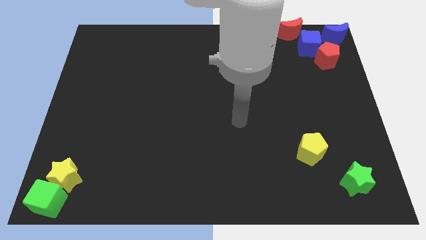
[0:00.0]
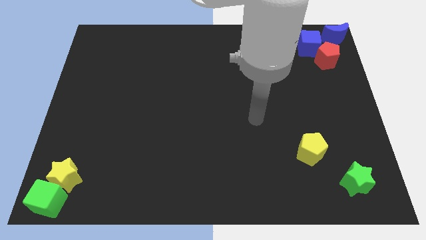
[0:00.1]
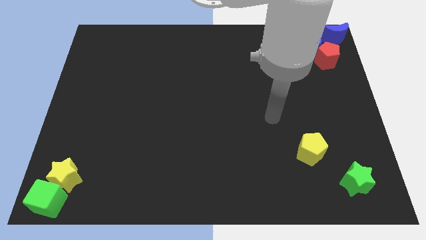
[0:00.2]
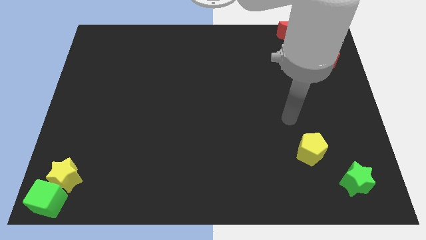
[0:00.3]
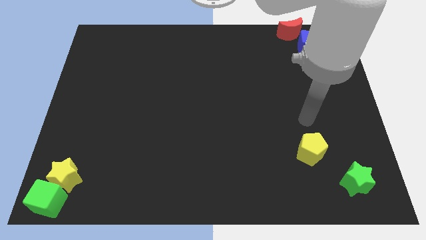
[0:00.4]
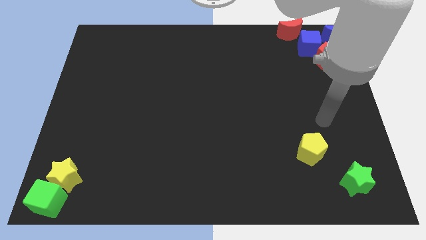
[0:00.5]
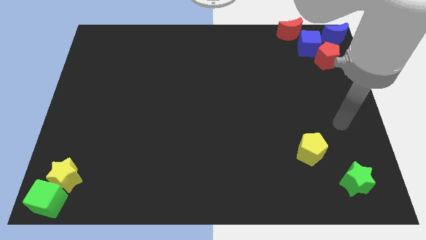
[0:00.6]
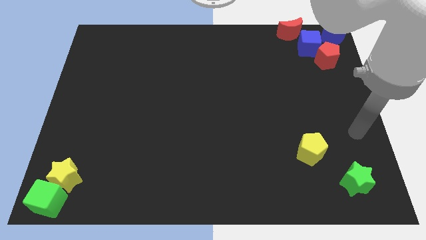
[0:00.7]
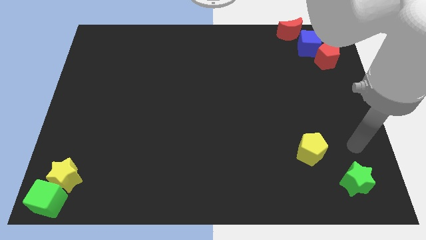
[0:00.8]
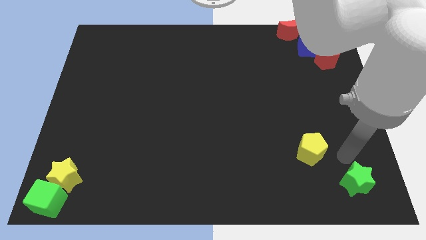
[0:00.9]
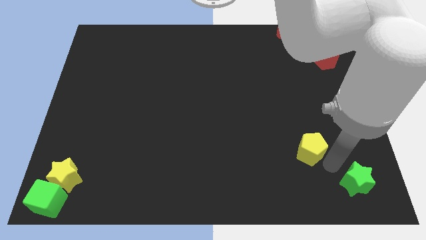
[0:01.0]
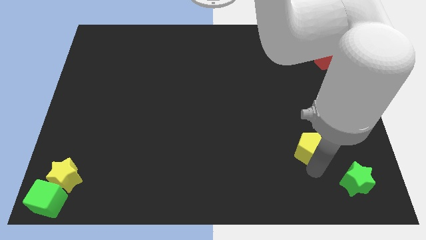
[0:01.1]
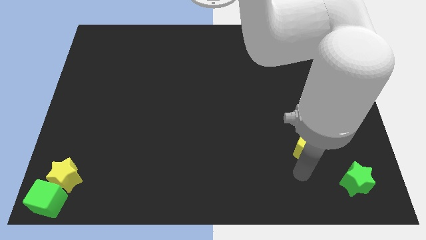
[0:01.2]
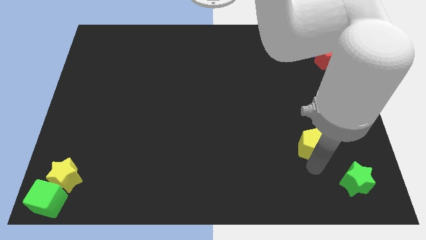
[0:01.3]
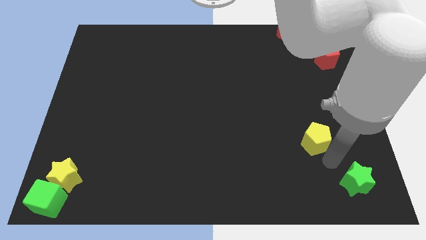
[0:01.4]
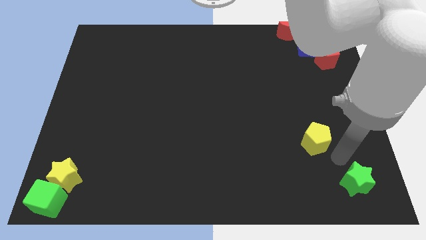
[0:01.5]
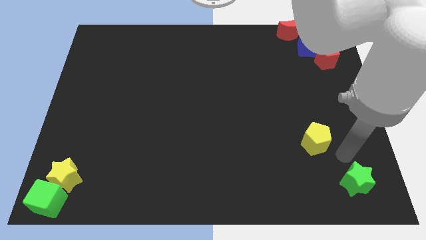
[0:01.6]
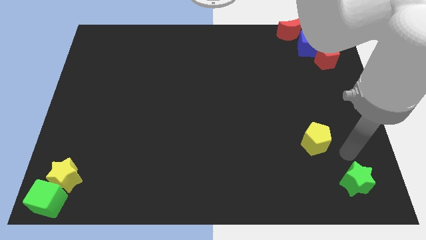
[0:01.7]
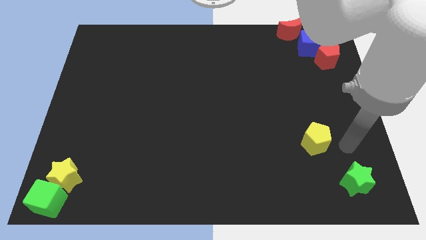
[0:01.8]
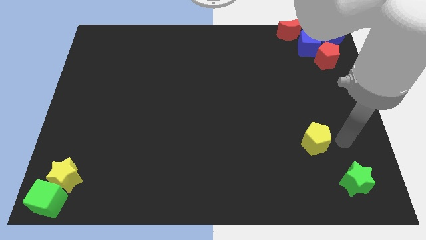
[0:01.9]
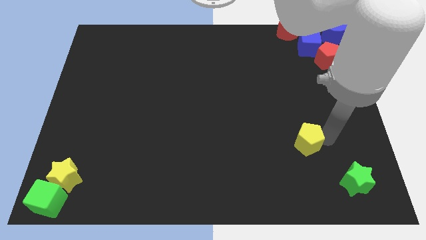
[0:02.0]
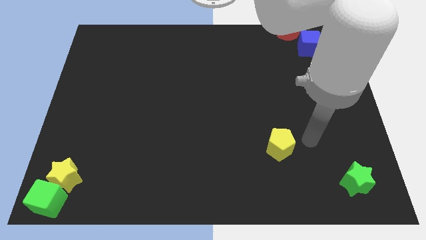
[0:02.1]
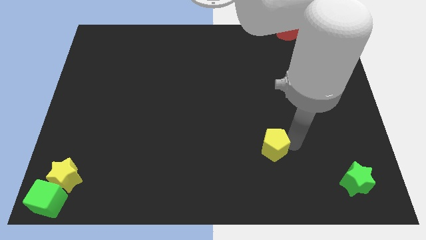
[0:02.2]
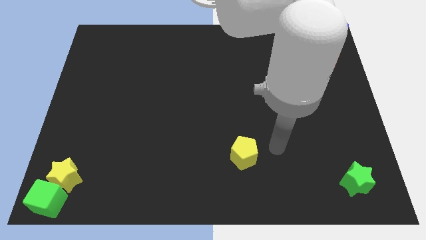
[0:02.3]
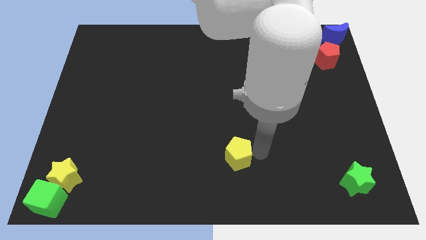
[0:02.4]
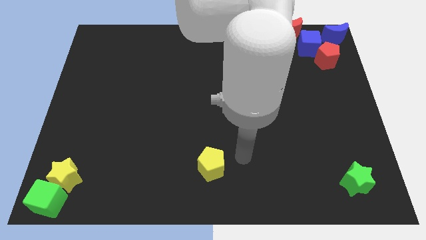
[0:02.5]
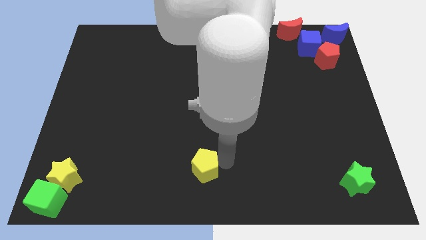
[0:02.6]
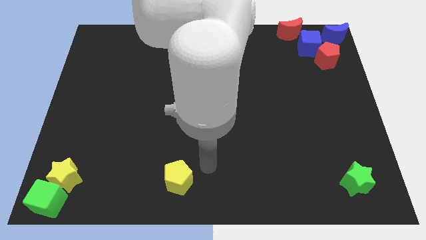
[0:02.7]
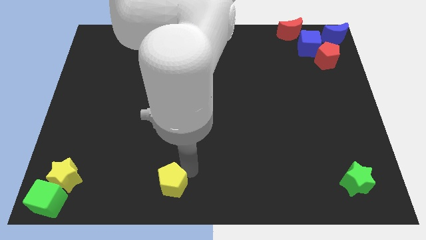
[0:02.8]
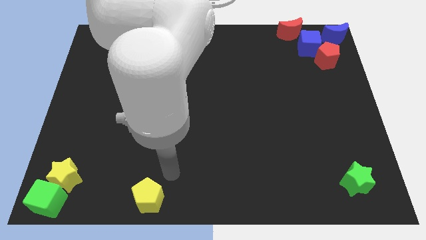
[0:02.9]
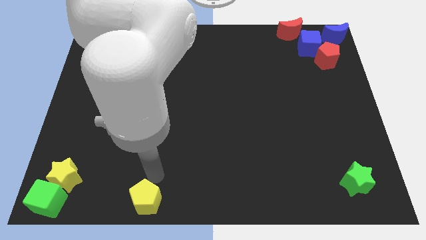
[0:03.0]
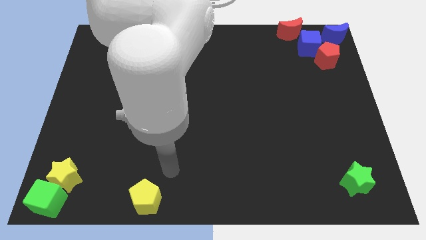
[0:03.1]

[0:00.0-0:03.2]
drag the yellow pentagon towards the bottom left side of the board

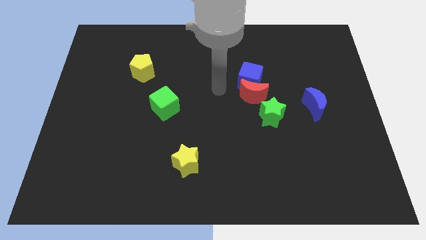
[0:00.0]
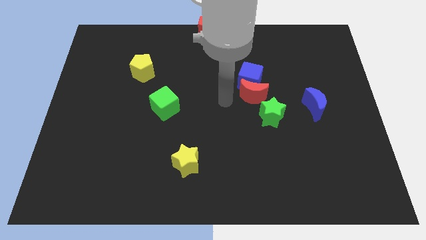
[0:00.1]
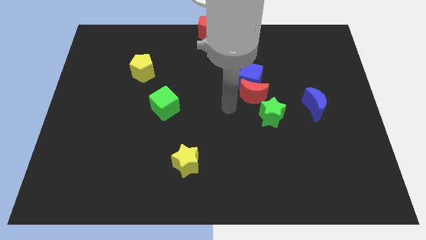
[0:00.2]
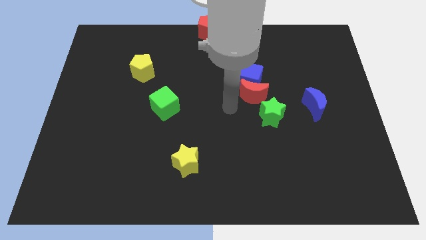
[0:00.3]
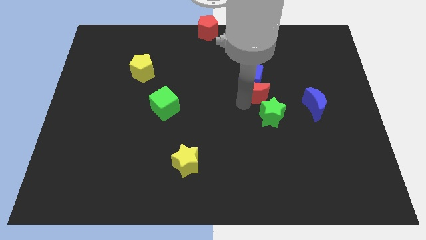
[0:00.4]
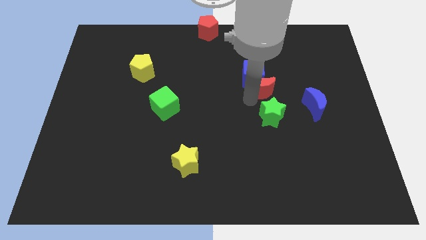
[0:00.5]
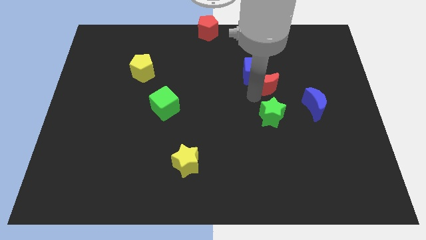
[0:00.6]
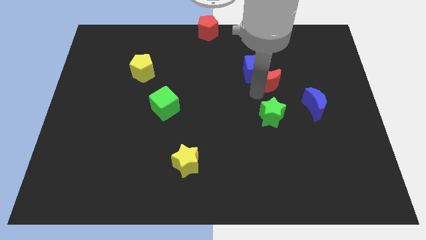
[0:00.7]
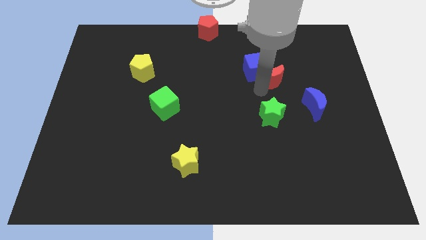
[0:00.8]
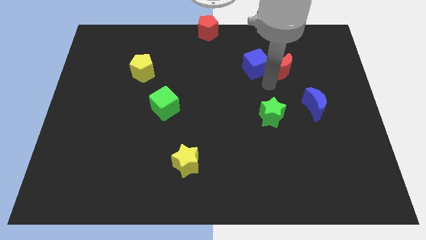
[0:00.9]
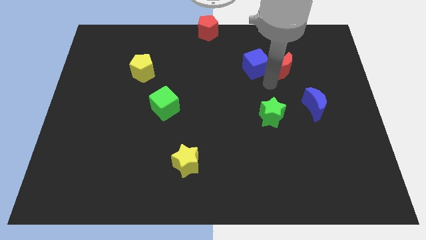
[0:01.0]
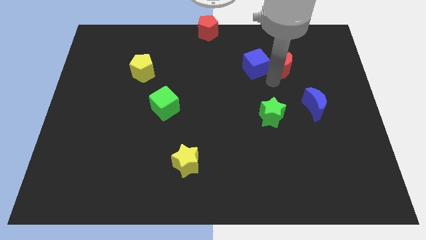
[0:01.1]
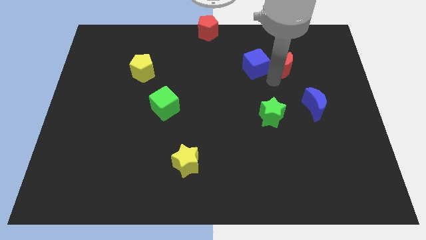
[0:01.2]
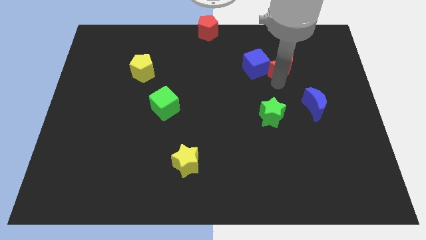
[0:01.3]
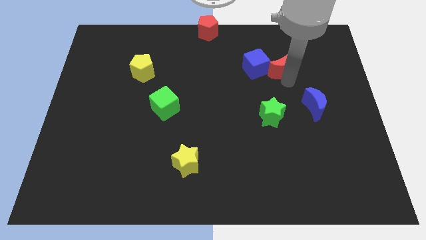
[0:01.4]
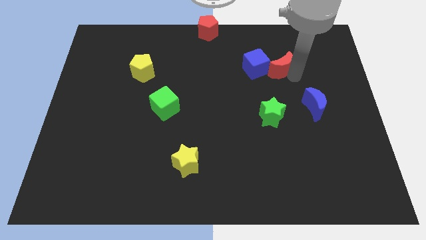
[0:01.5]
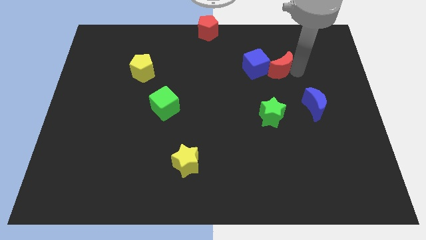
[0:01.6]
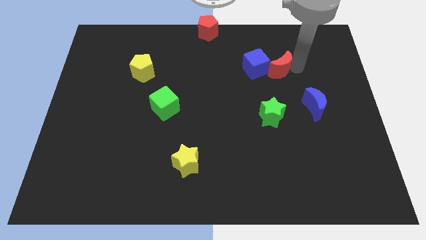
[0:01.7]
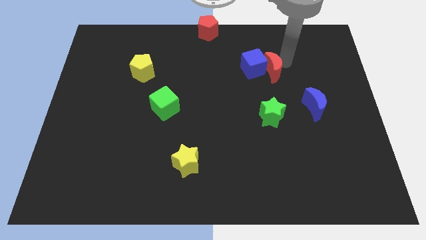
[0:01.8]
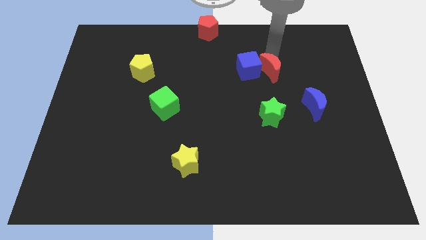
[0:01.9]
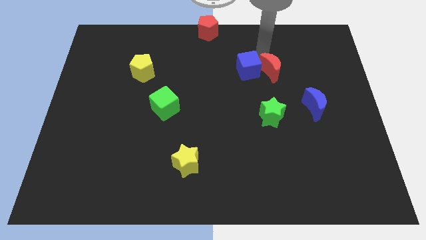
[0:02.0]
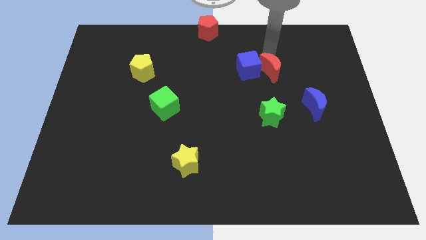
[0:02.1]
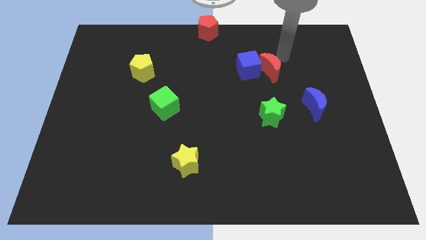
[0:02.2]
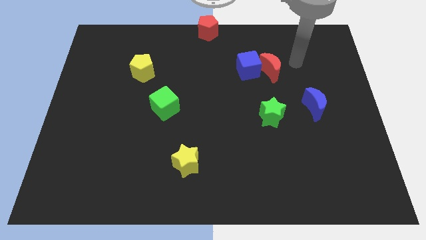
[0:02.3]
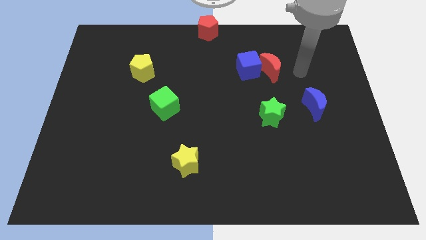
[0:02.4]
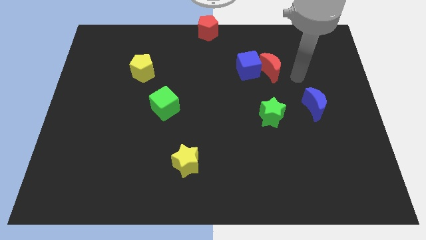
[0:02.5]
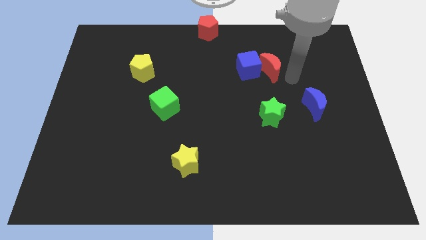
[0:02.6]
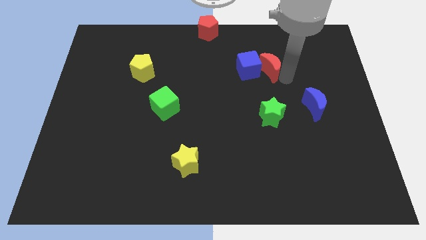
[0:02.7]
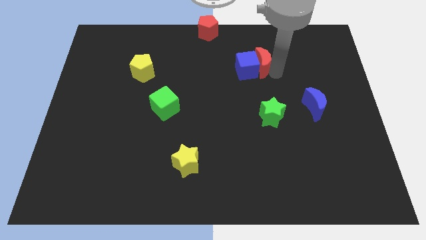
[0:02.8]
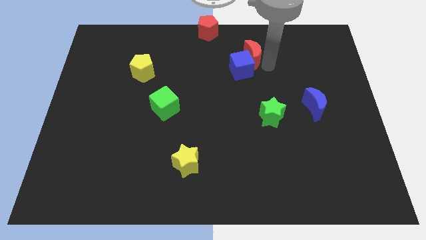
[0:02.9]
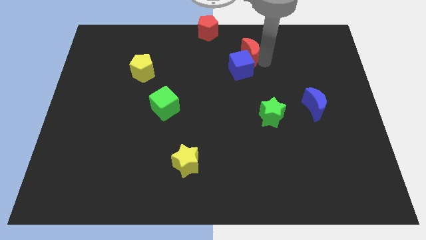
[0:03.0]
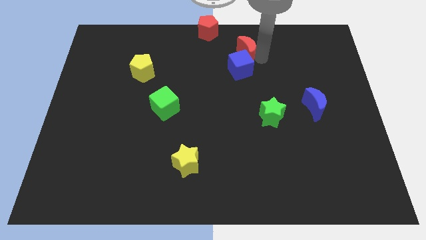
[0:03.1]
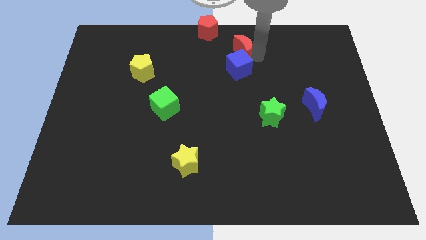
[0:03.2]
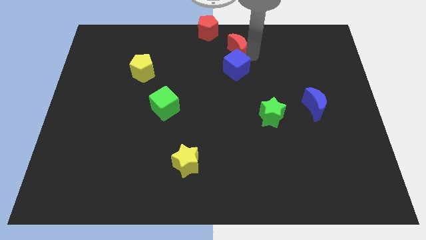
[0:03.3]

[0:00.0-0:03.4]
move the blue cube with the red crescent

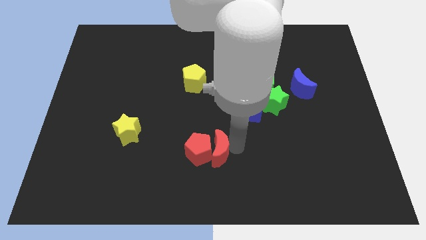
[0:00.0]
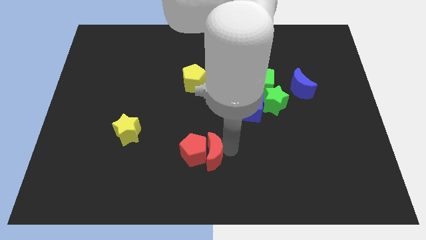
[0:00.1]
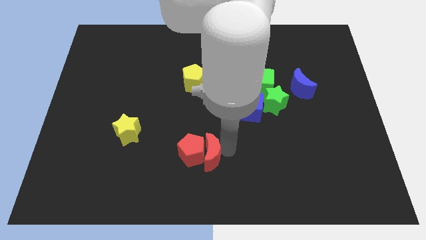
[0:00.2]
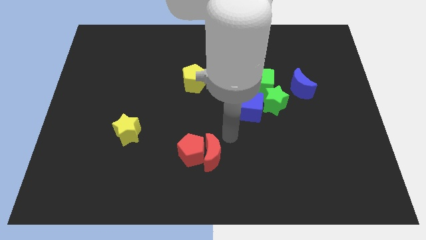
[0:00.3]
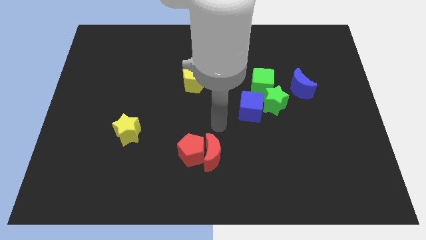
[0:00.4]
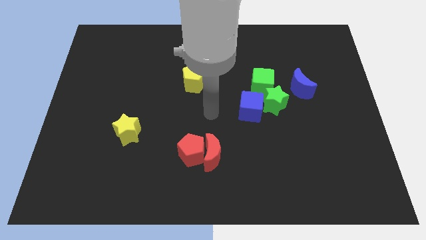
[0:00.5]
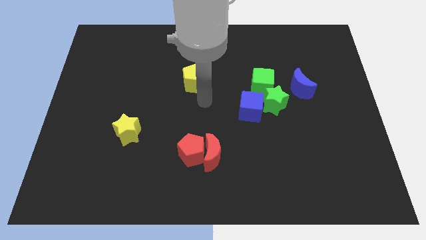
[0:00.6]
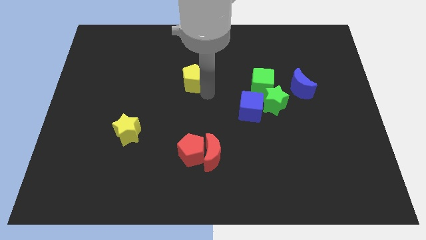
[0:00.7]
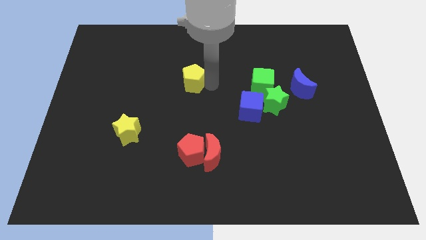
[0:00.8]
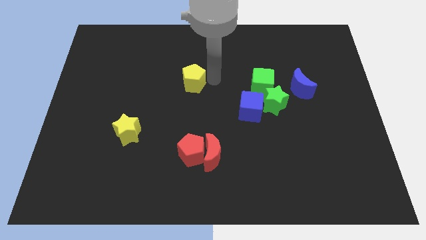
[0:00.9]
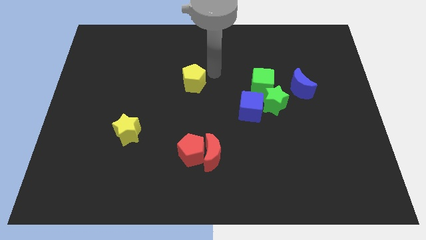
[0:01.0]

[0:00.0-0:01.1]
move the arm to the left of the yellow pentagon

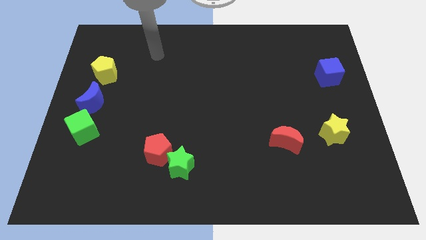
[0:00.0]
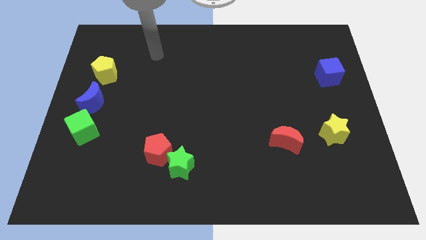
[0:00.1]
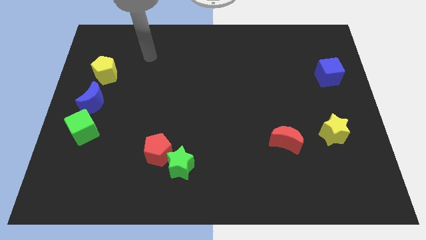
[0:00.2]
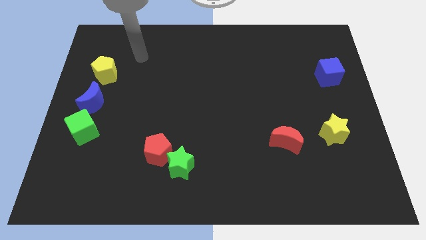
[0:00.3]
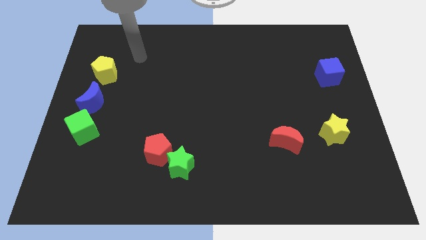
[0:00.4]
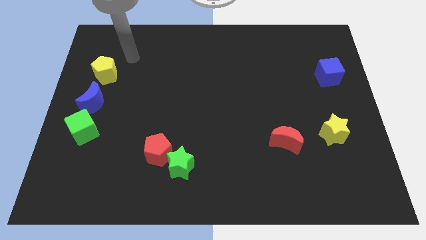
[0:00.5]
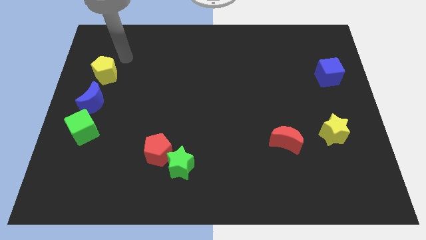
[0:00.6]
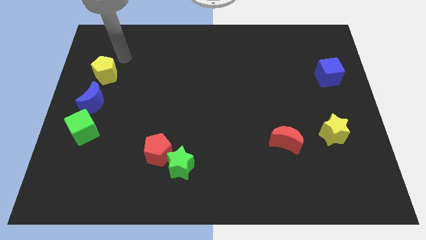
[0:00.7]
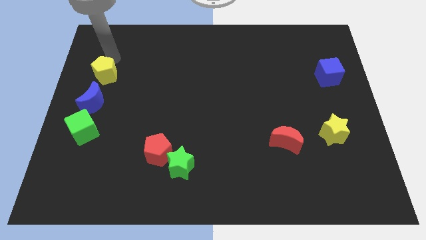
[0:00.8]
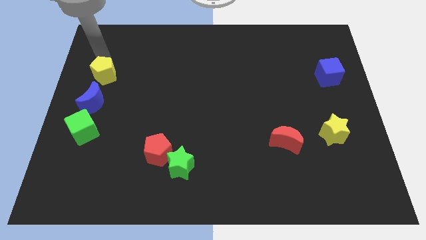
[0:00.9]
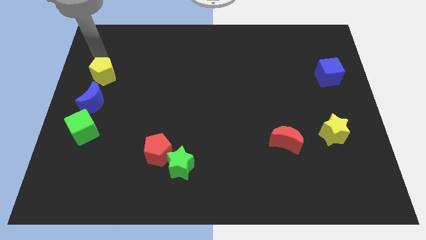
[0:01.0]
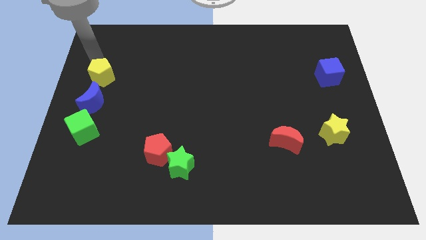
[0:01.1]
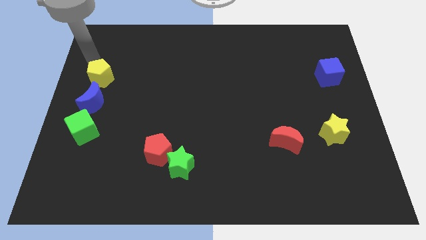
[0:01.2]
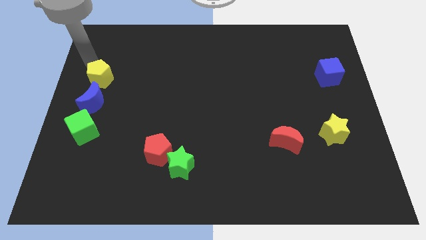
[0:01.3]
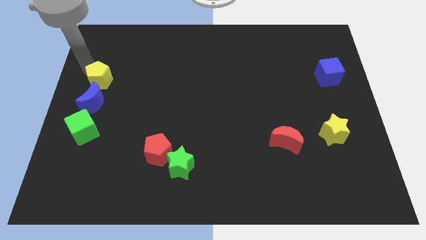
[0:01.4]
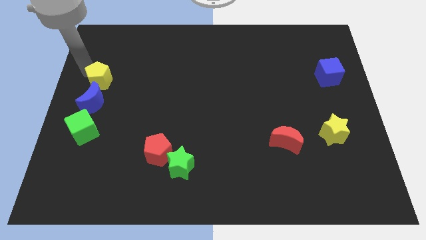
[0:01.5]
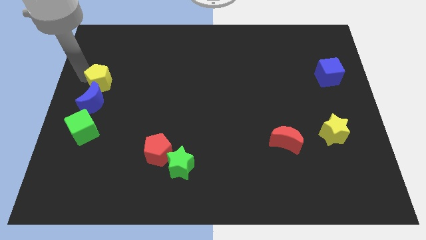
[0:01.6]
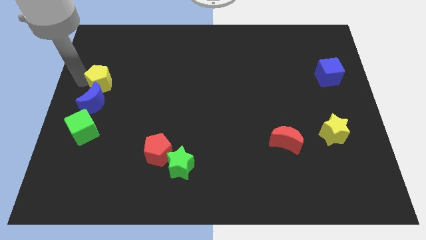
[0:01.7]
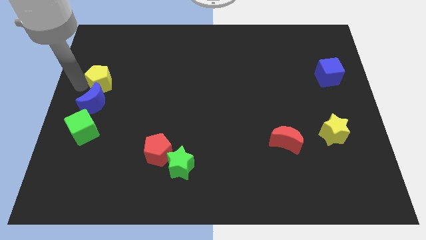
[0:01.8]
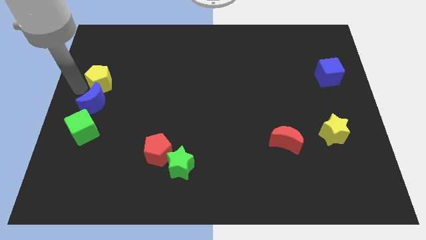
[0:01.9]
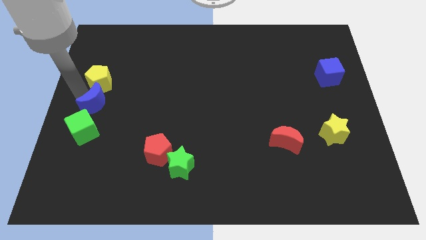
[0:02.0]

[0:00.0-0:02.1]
push the yellow pentagon above the blue crescent
